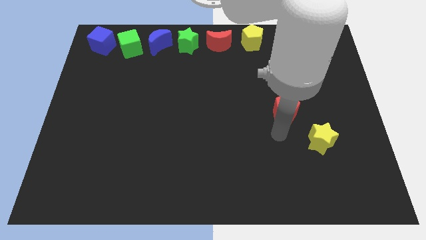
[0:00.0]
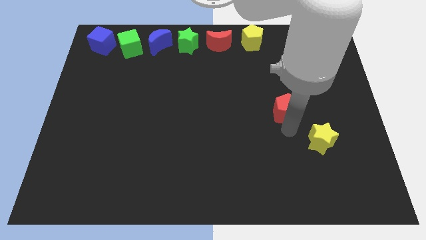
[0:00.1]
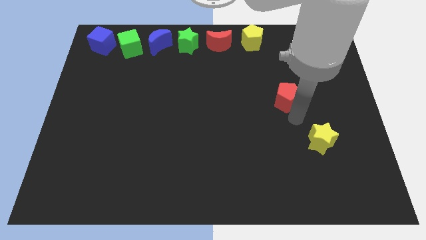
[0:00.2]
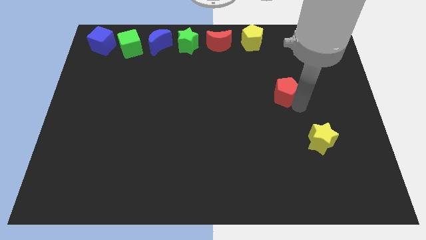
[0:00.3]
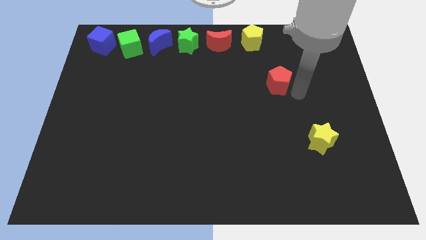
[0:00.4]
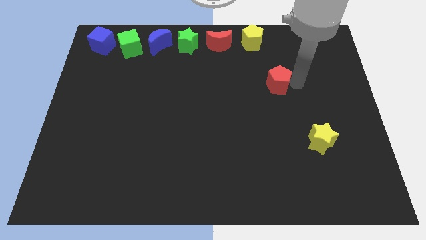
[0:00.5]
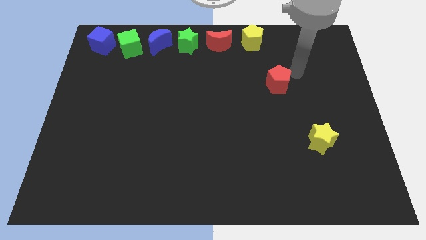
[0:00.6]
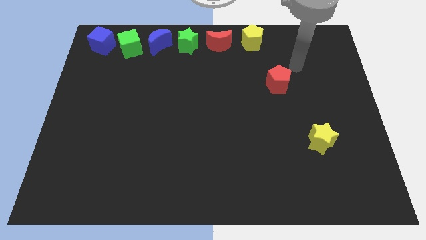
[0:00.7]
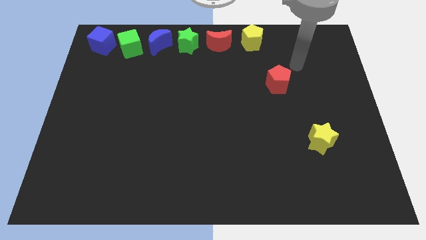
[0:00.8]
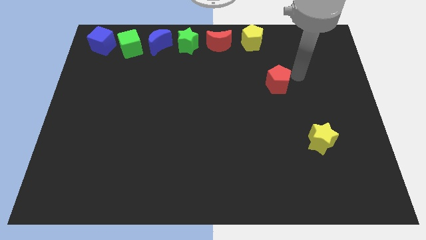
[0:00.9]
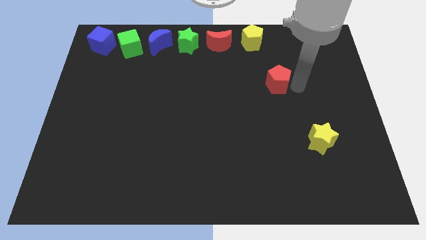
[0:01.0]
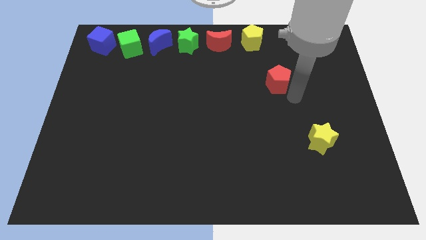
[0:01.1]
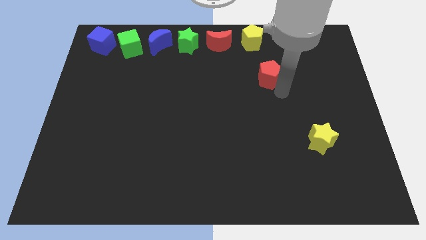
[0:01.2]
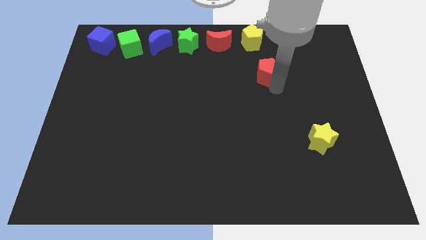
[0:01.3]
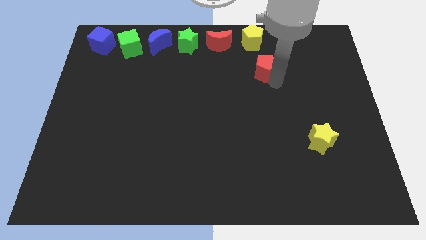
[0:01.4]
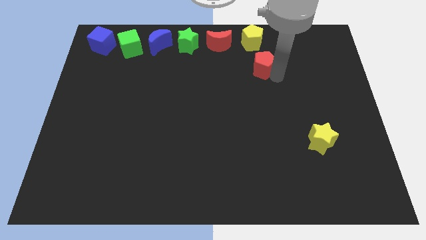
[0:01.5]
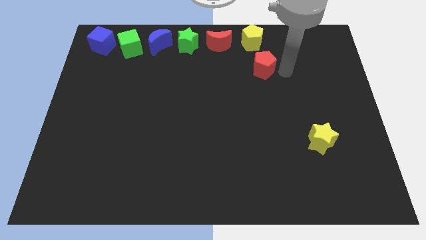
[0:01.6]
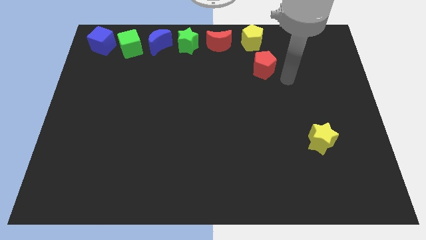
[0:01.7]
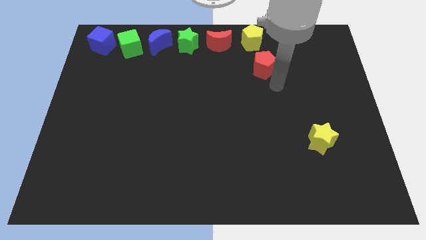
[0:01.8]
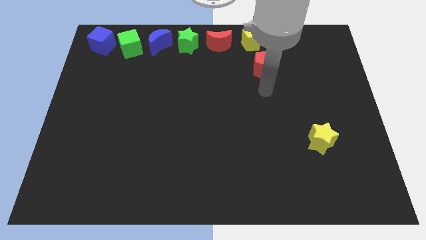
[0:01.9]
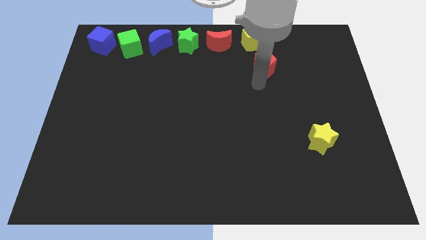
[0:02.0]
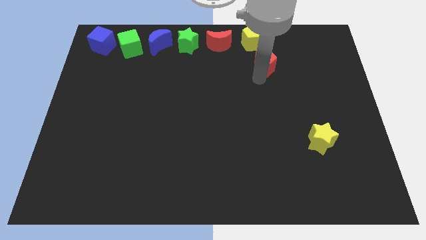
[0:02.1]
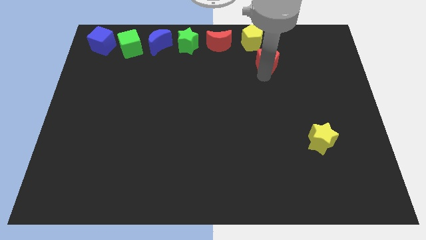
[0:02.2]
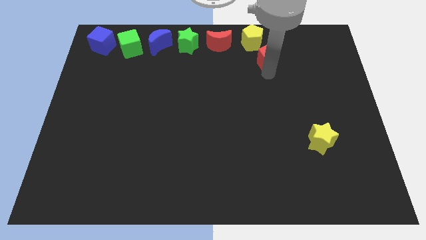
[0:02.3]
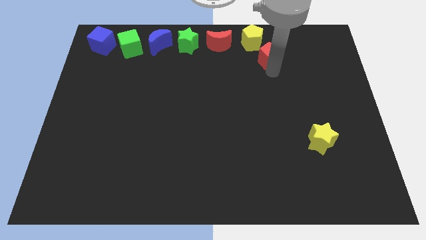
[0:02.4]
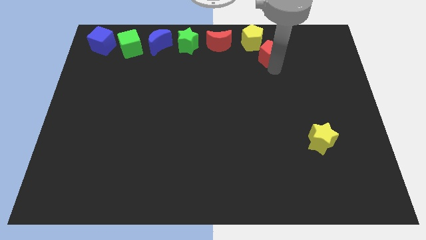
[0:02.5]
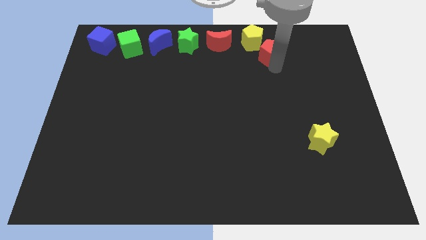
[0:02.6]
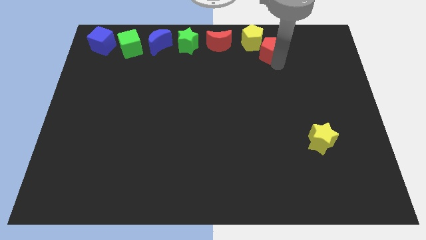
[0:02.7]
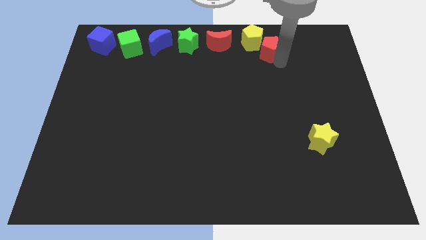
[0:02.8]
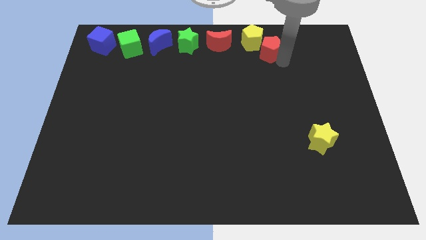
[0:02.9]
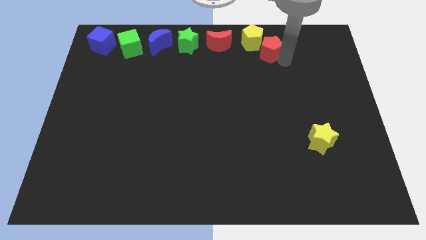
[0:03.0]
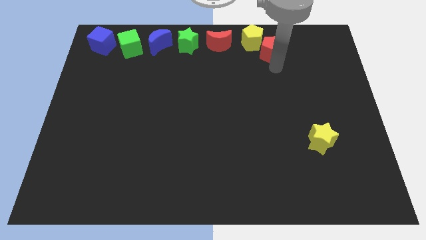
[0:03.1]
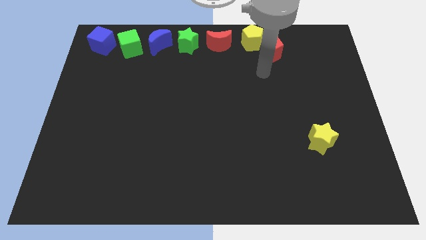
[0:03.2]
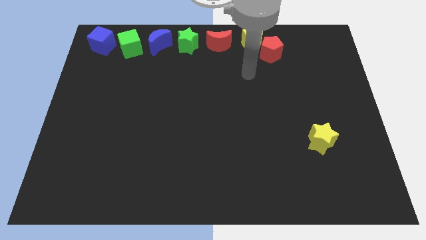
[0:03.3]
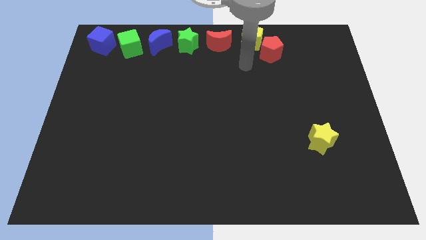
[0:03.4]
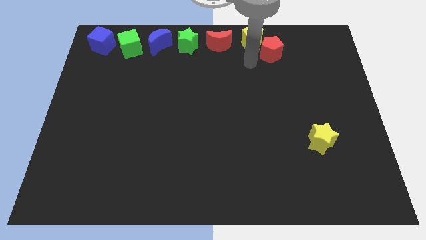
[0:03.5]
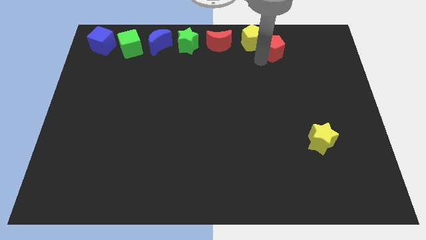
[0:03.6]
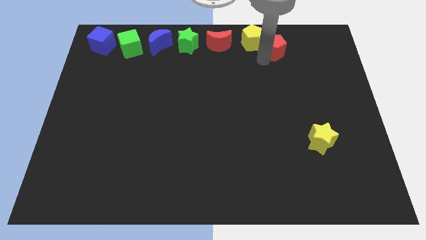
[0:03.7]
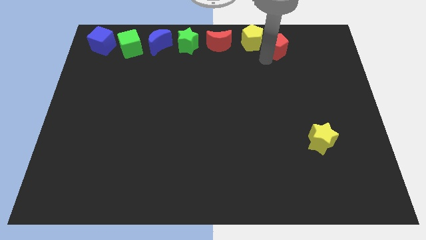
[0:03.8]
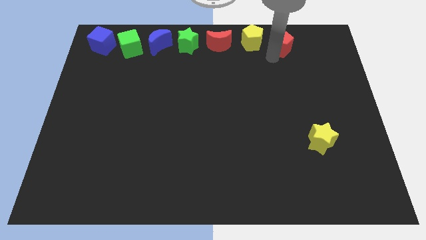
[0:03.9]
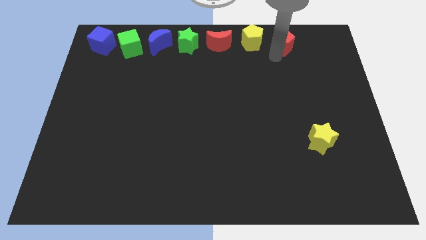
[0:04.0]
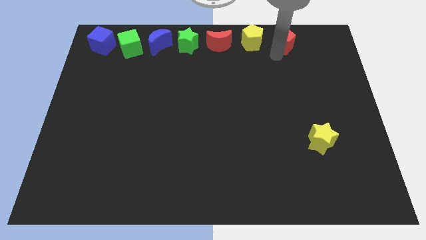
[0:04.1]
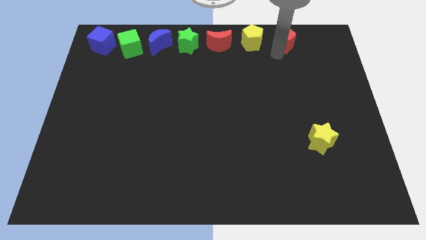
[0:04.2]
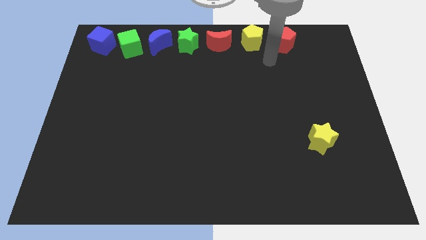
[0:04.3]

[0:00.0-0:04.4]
drag red pentagon beside yellow pentagon

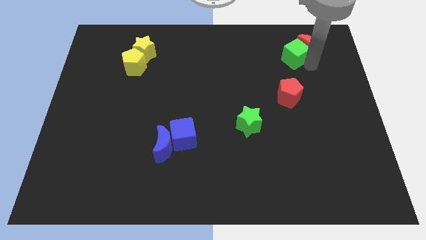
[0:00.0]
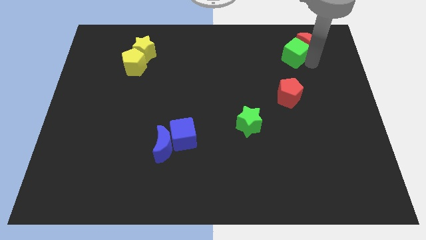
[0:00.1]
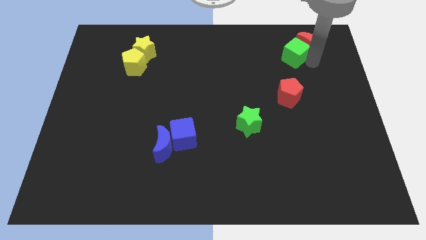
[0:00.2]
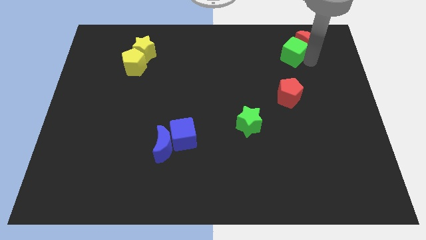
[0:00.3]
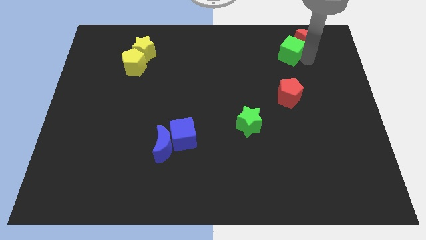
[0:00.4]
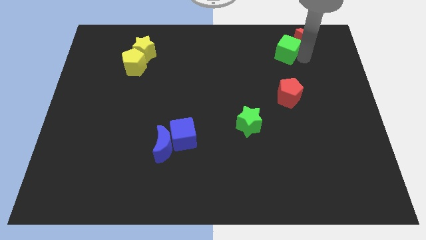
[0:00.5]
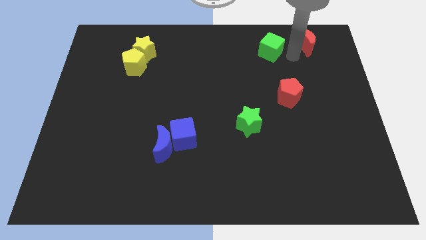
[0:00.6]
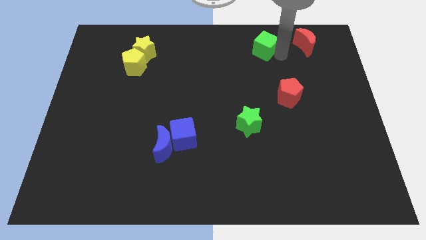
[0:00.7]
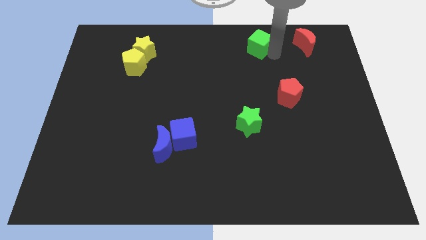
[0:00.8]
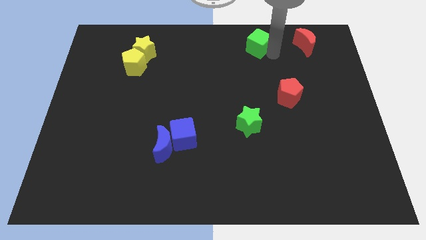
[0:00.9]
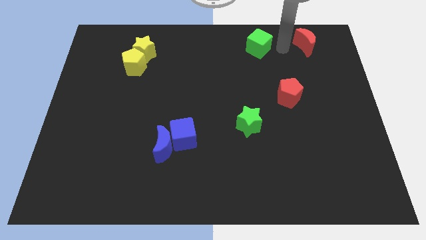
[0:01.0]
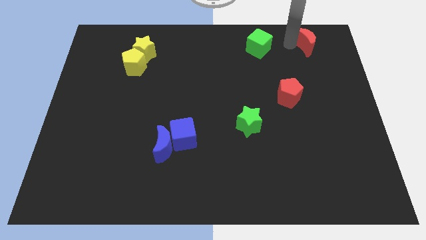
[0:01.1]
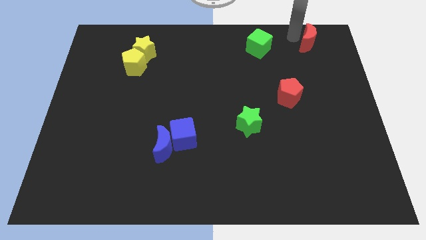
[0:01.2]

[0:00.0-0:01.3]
separate the red crescent from the green cube

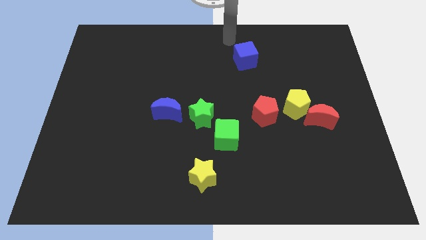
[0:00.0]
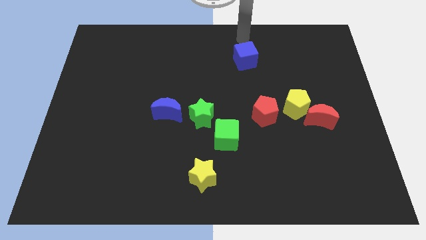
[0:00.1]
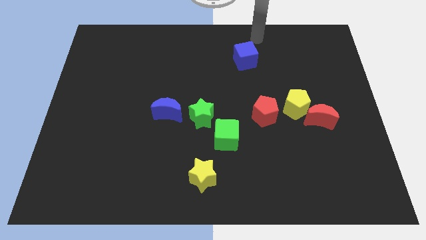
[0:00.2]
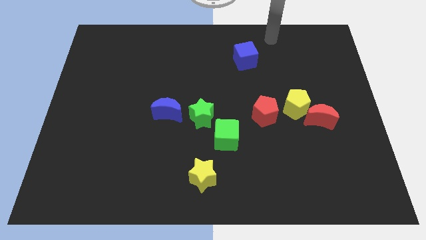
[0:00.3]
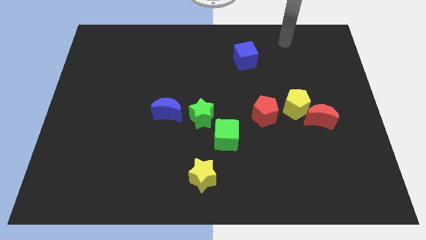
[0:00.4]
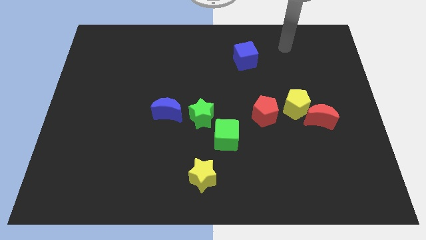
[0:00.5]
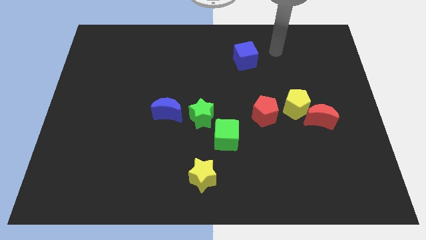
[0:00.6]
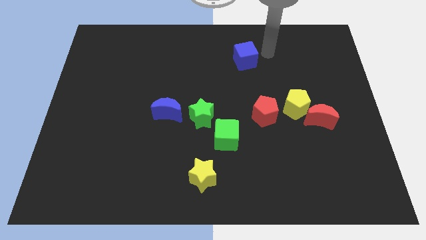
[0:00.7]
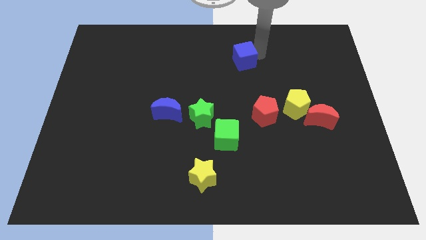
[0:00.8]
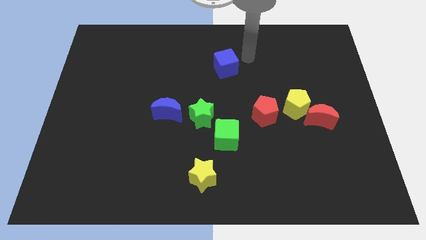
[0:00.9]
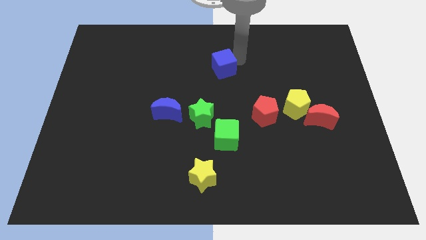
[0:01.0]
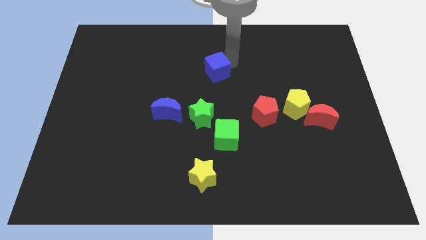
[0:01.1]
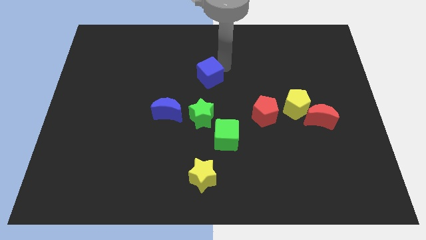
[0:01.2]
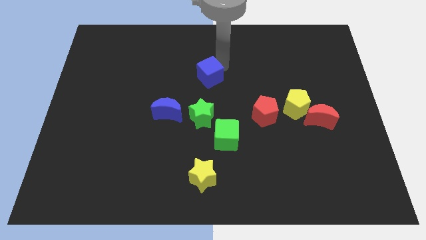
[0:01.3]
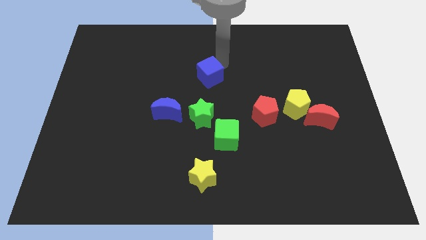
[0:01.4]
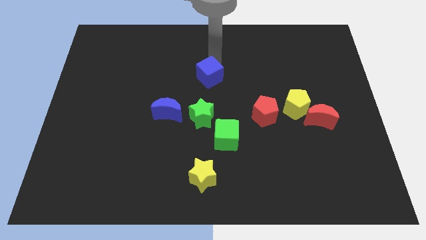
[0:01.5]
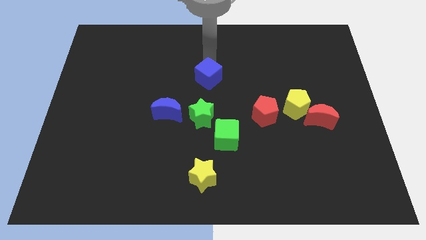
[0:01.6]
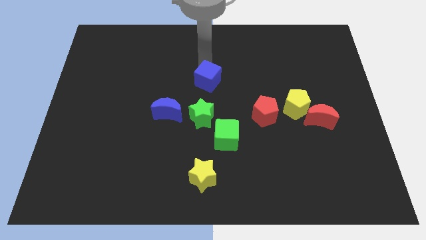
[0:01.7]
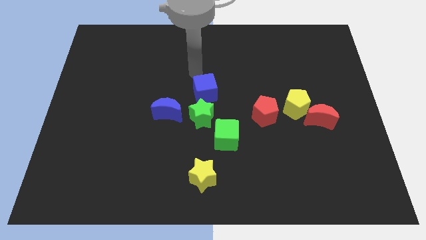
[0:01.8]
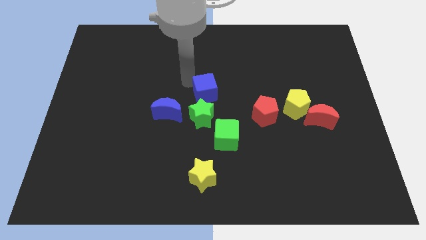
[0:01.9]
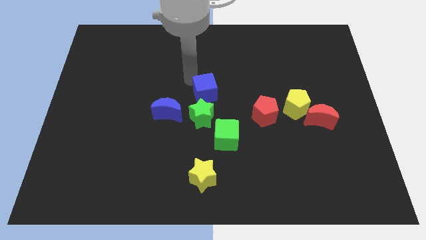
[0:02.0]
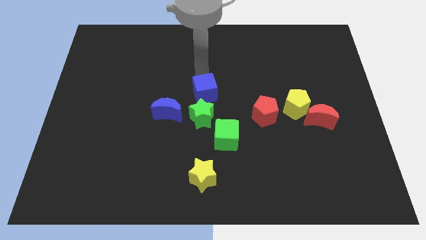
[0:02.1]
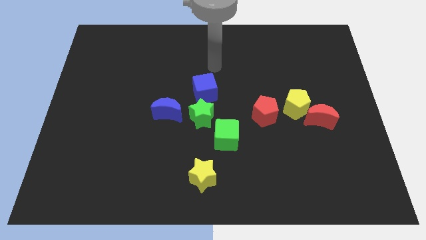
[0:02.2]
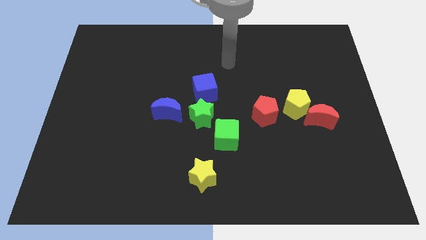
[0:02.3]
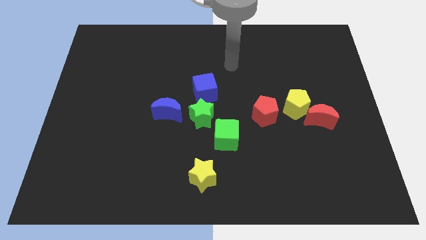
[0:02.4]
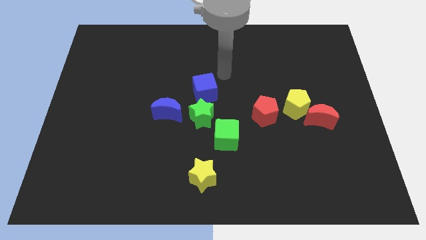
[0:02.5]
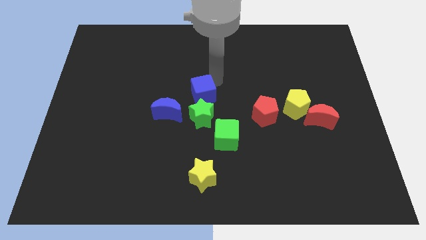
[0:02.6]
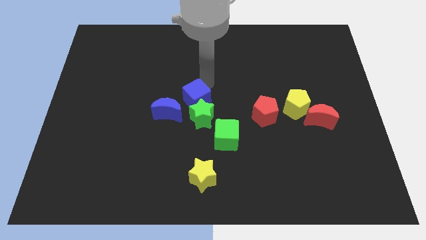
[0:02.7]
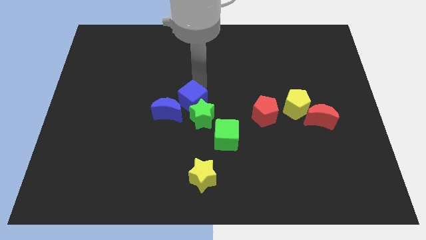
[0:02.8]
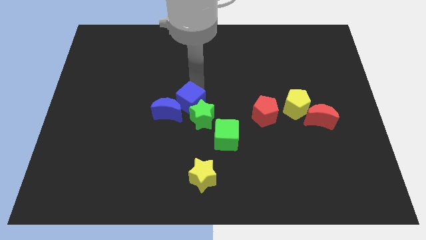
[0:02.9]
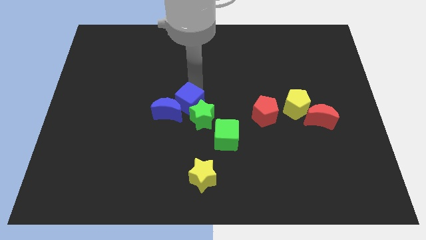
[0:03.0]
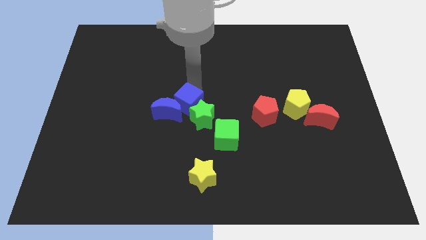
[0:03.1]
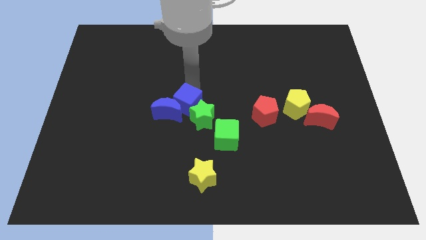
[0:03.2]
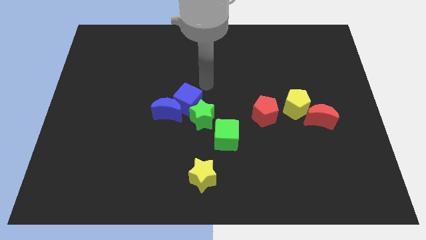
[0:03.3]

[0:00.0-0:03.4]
push the blue cube towards the blue moon
